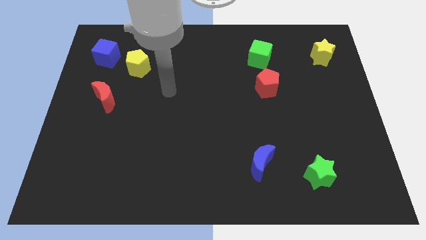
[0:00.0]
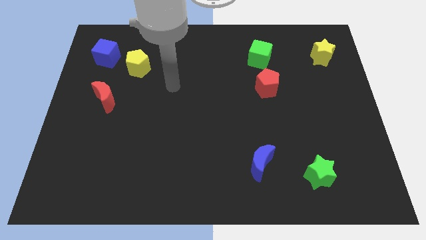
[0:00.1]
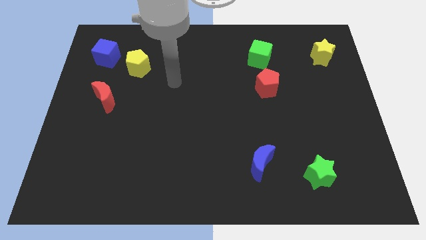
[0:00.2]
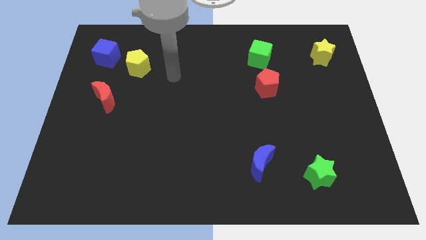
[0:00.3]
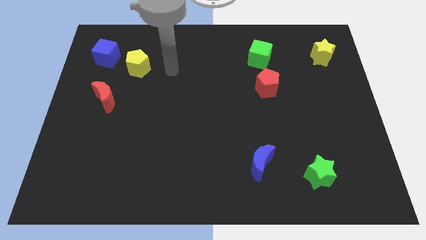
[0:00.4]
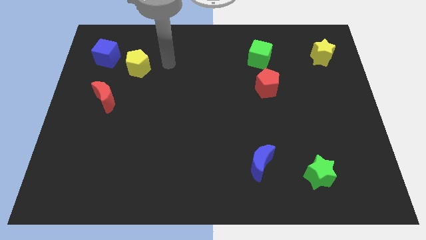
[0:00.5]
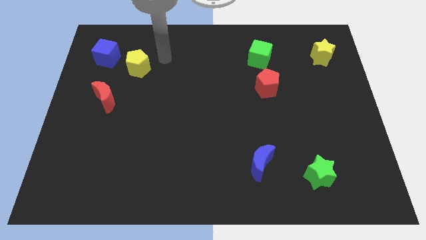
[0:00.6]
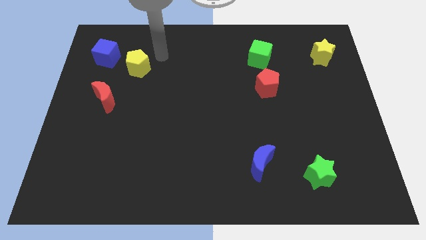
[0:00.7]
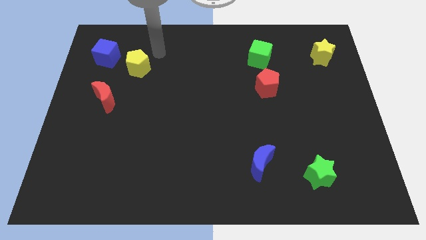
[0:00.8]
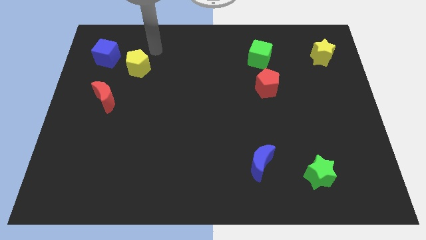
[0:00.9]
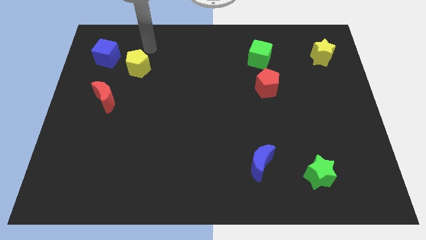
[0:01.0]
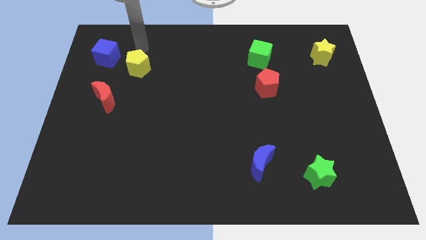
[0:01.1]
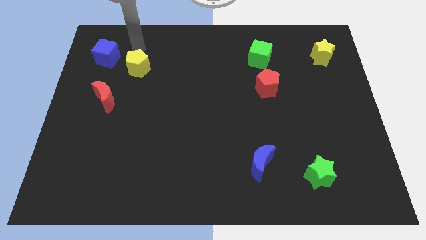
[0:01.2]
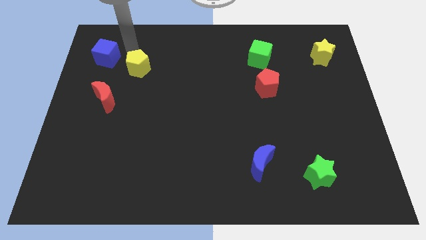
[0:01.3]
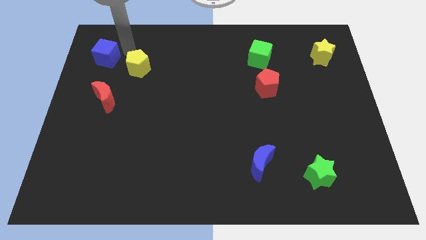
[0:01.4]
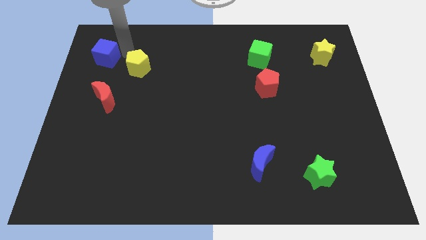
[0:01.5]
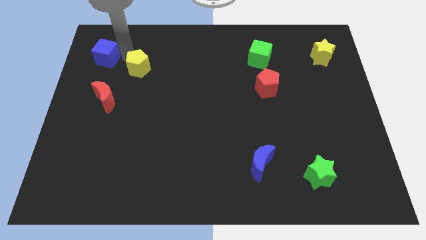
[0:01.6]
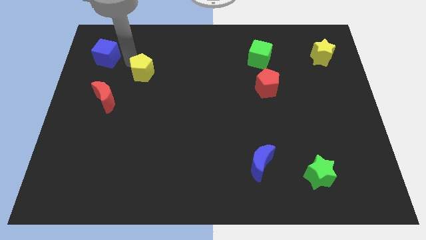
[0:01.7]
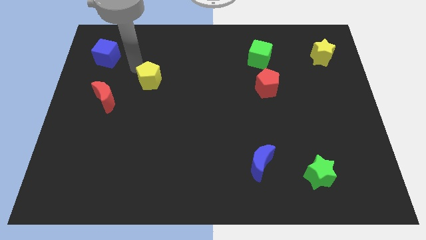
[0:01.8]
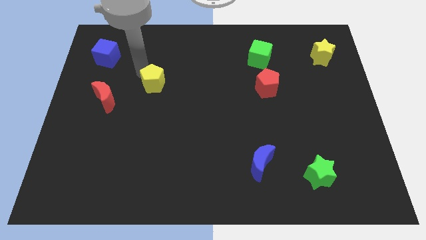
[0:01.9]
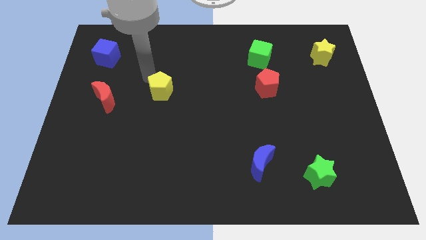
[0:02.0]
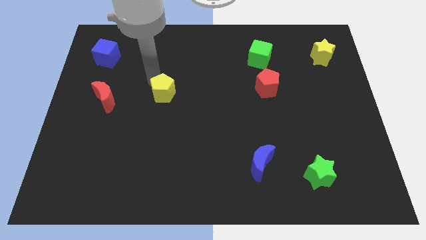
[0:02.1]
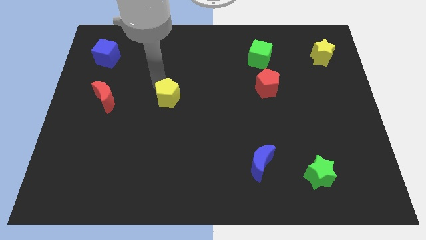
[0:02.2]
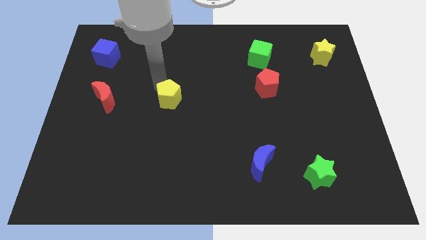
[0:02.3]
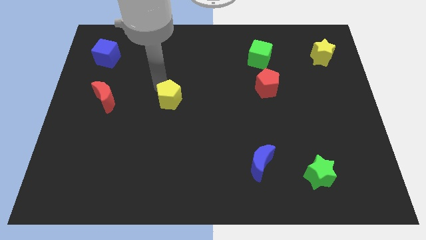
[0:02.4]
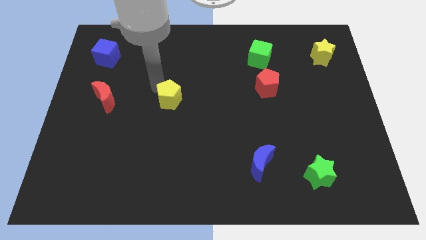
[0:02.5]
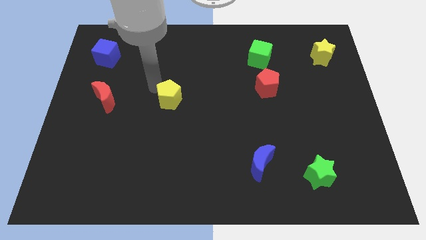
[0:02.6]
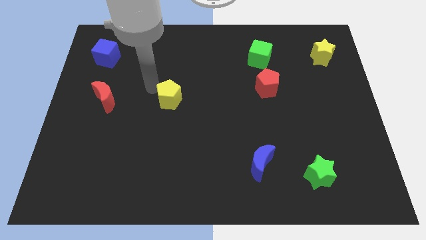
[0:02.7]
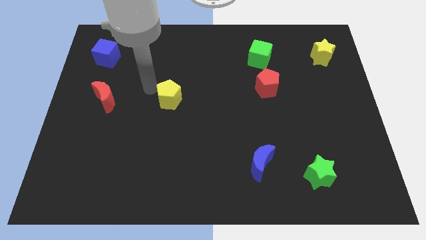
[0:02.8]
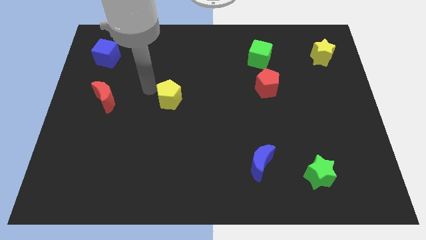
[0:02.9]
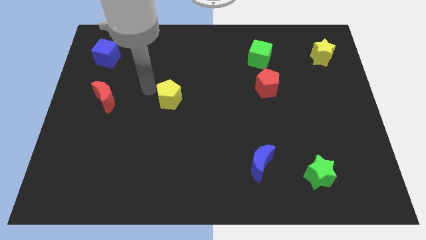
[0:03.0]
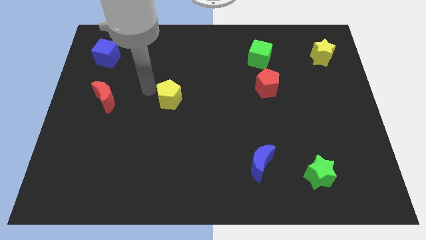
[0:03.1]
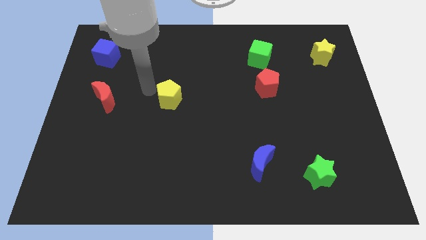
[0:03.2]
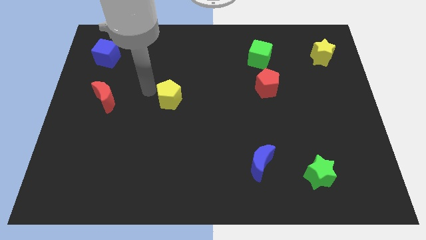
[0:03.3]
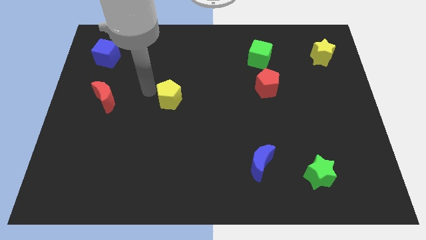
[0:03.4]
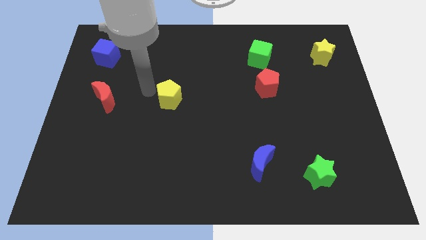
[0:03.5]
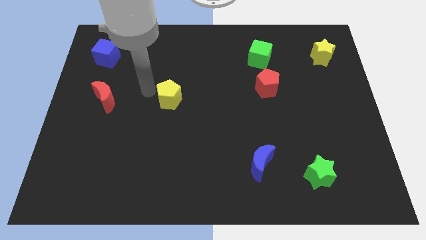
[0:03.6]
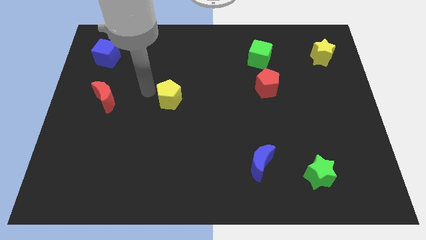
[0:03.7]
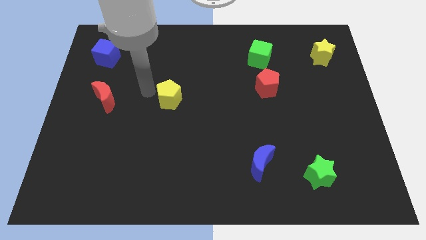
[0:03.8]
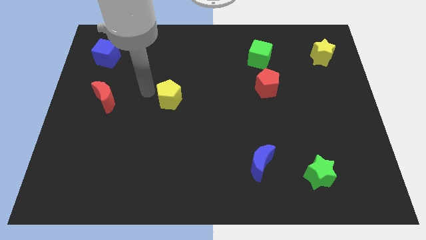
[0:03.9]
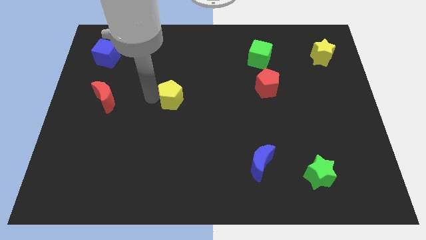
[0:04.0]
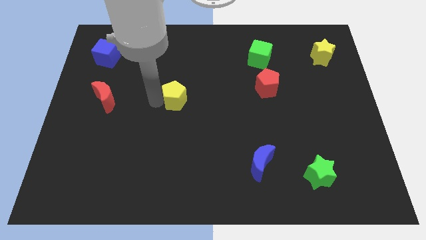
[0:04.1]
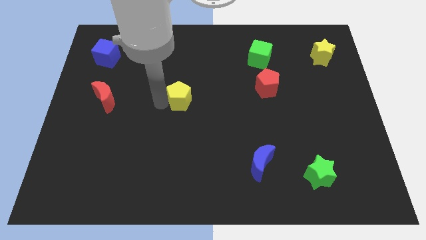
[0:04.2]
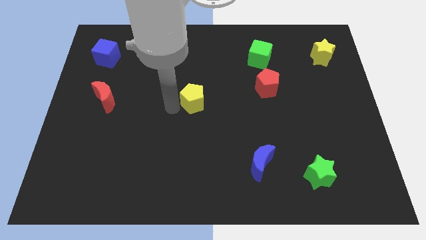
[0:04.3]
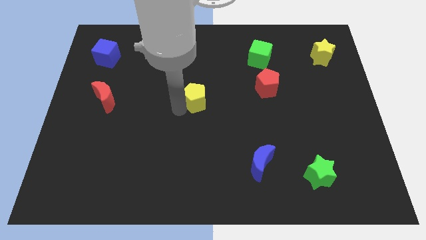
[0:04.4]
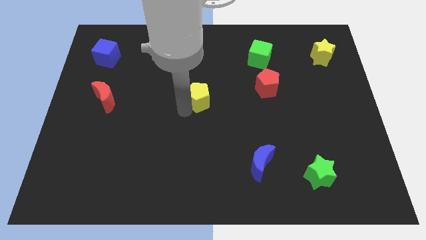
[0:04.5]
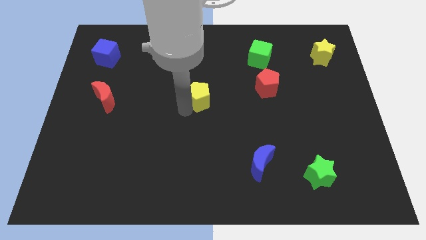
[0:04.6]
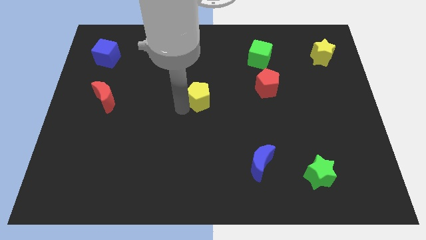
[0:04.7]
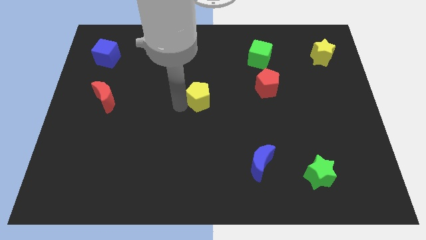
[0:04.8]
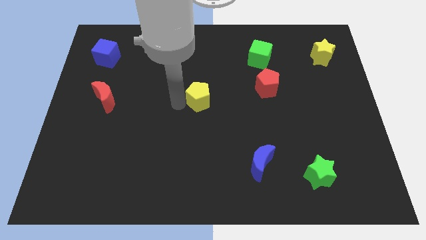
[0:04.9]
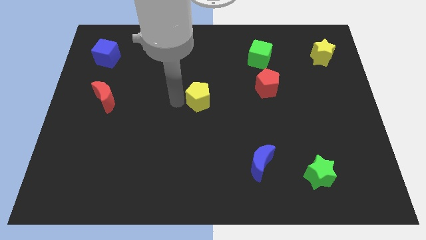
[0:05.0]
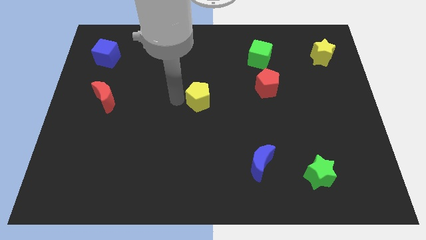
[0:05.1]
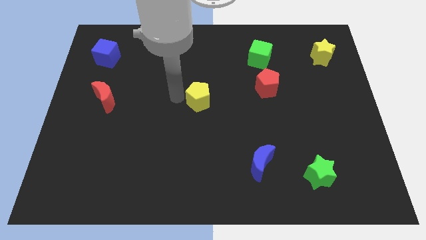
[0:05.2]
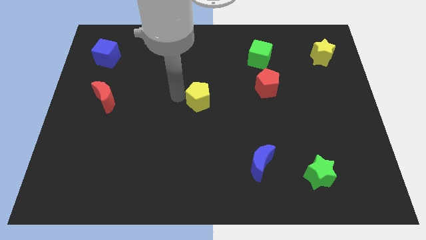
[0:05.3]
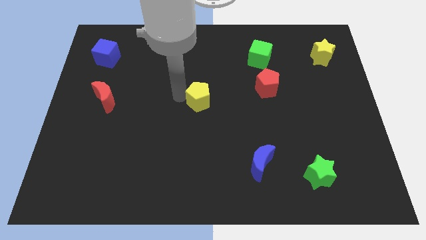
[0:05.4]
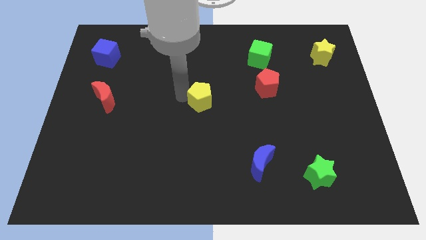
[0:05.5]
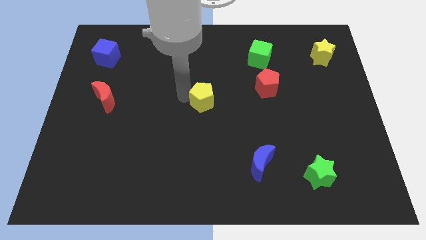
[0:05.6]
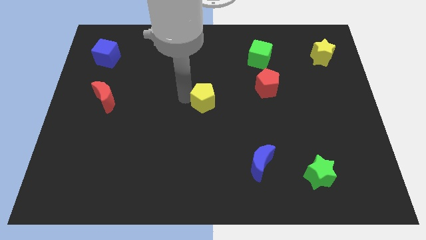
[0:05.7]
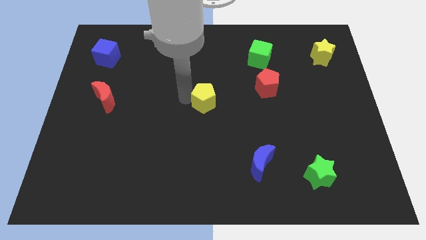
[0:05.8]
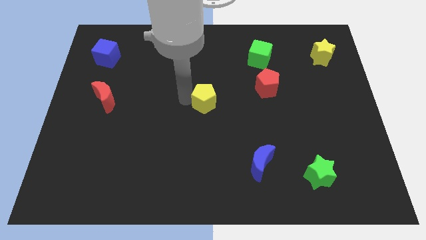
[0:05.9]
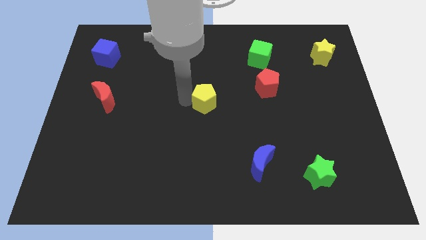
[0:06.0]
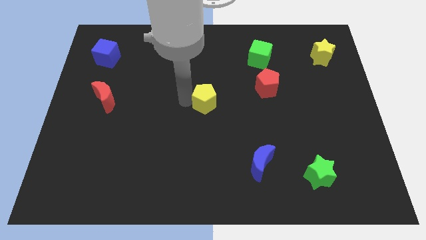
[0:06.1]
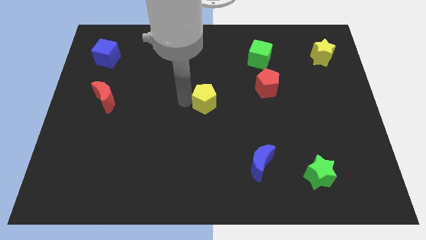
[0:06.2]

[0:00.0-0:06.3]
push the yellow pentagon to the bottom left of the green cube

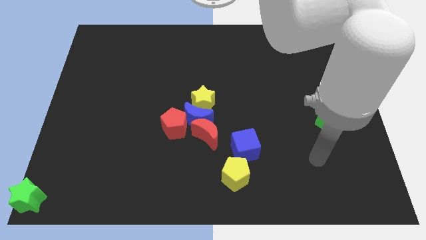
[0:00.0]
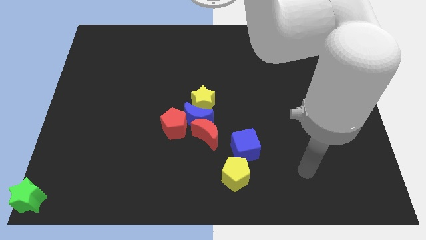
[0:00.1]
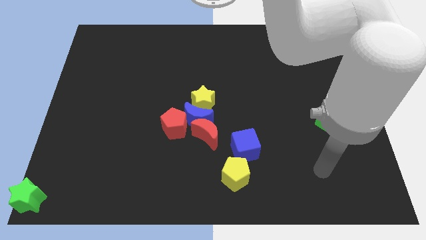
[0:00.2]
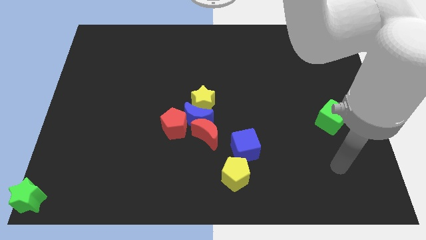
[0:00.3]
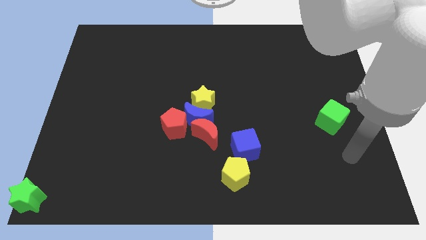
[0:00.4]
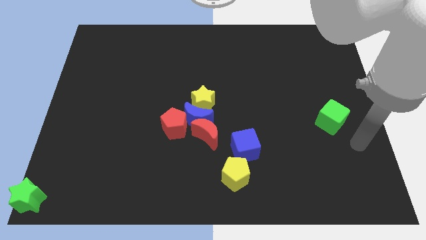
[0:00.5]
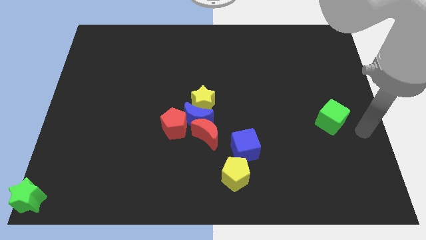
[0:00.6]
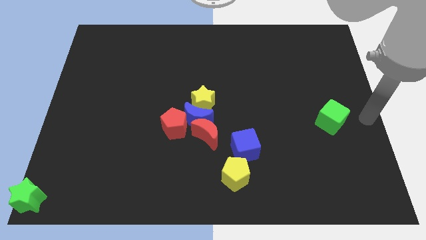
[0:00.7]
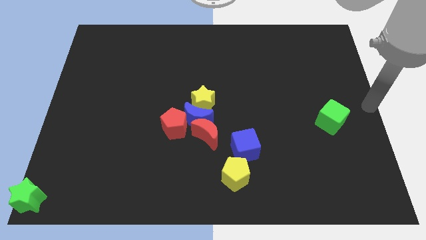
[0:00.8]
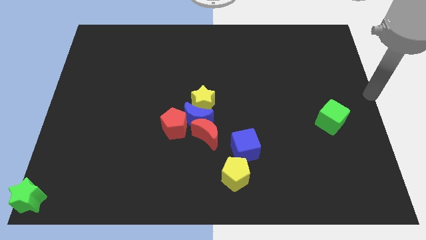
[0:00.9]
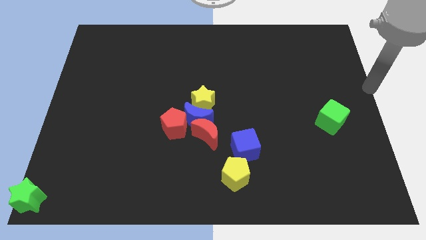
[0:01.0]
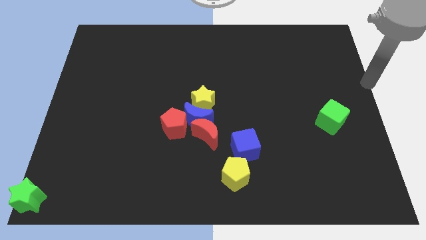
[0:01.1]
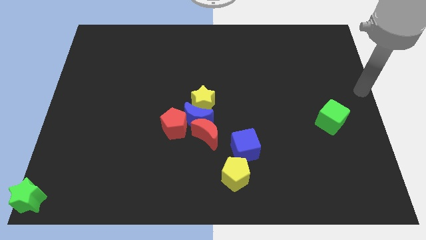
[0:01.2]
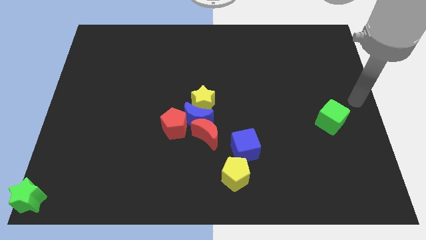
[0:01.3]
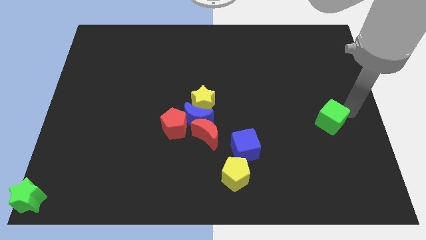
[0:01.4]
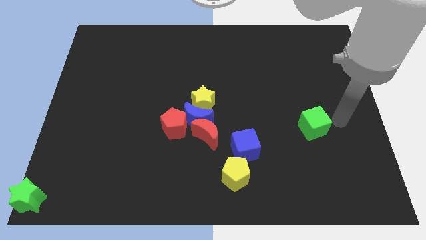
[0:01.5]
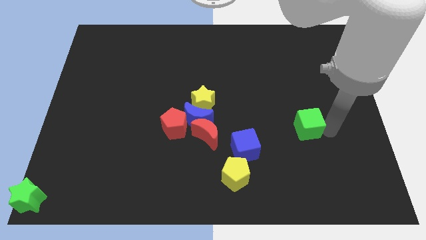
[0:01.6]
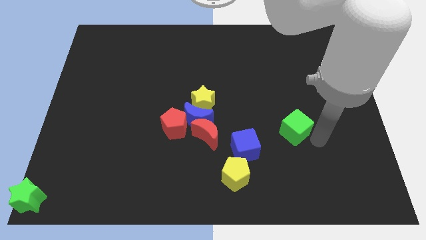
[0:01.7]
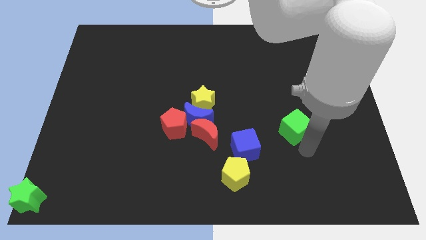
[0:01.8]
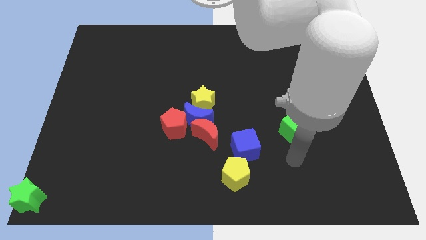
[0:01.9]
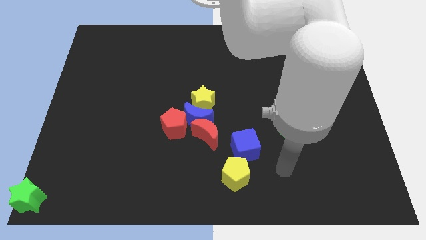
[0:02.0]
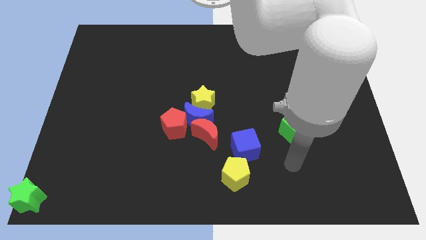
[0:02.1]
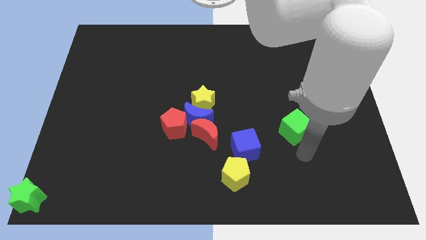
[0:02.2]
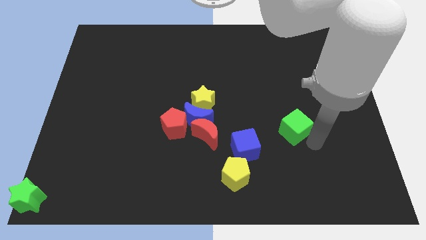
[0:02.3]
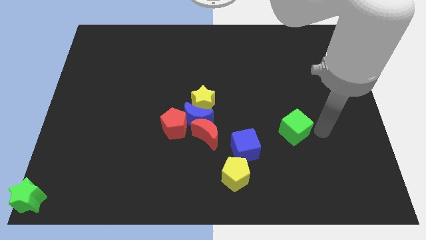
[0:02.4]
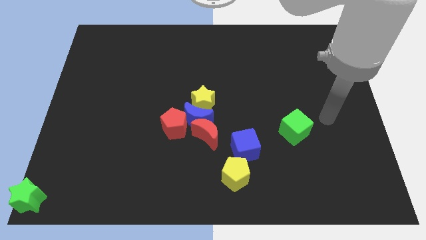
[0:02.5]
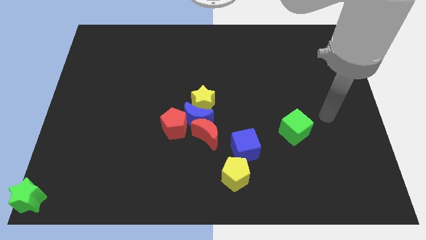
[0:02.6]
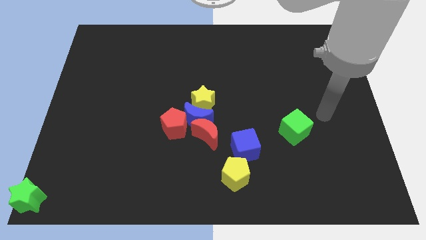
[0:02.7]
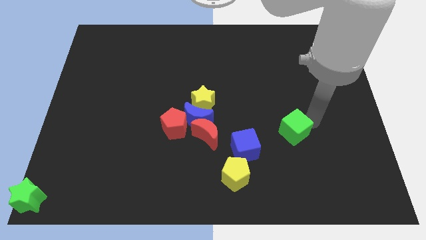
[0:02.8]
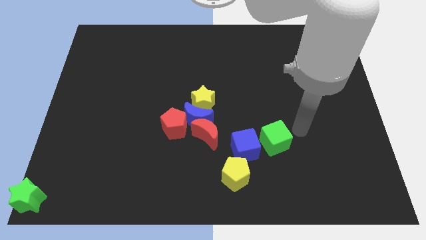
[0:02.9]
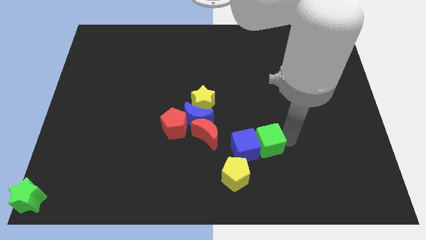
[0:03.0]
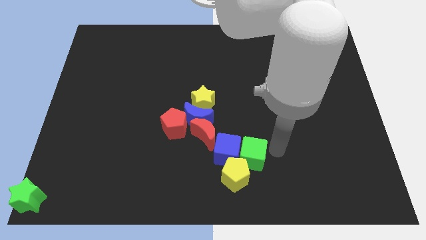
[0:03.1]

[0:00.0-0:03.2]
push the green cube into blue cube
